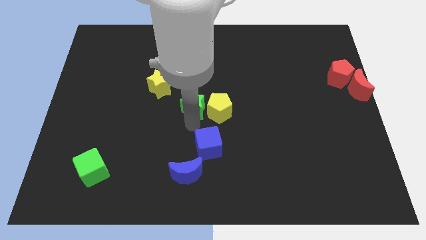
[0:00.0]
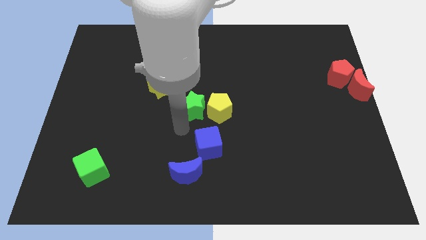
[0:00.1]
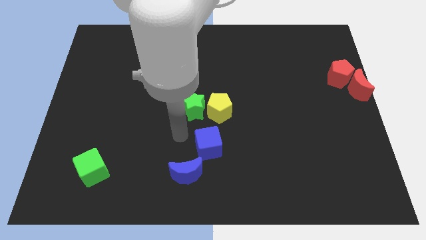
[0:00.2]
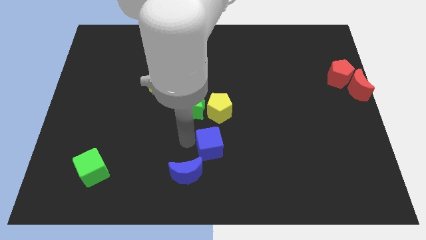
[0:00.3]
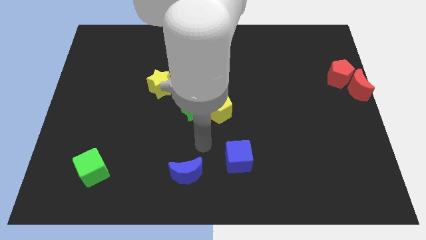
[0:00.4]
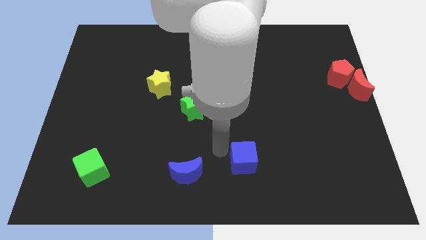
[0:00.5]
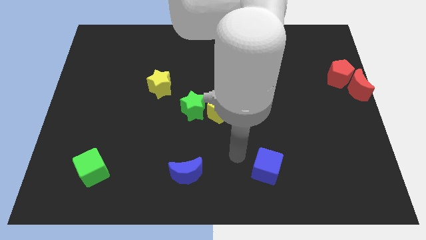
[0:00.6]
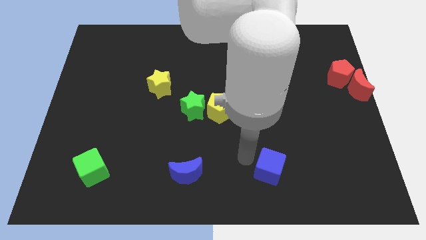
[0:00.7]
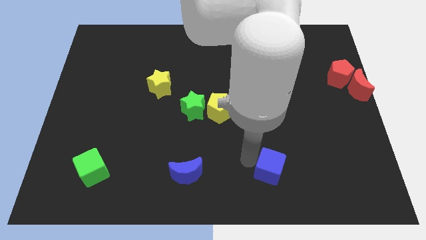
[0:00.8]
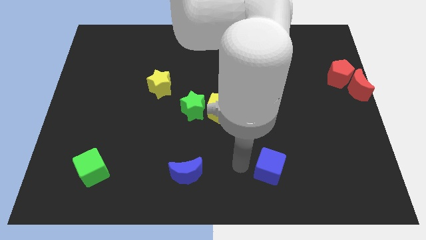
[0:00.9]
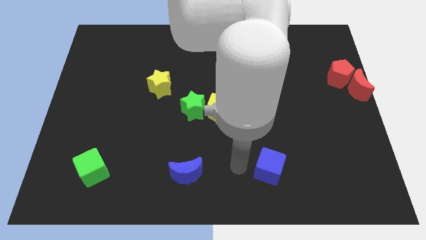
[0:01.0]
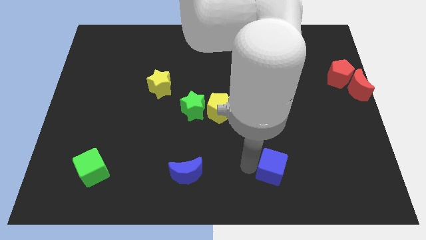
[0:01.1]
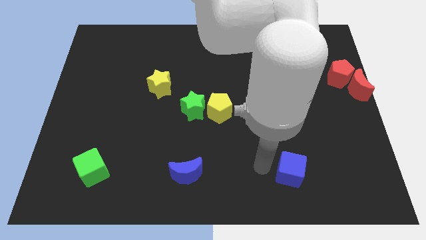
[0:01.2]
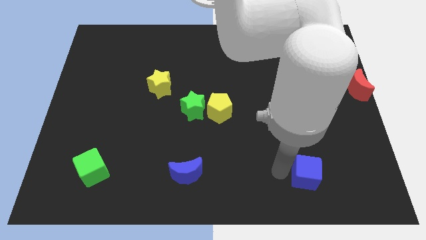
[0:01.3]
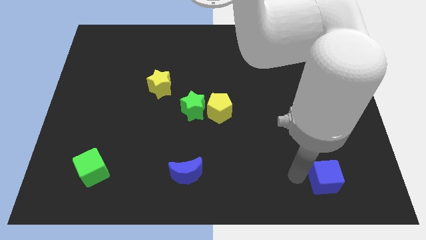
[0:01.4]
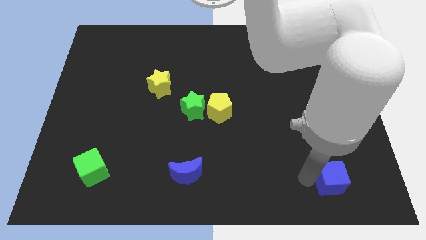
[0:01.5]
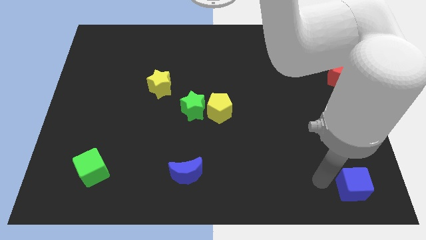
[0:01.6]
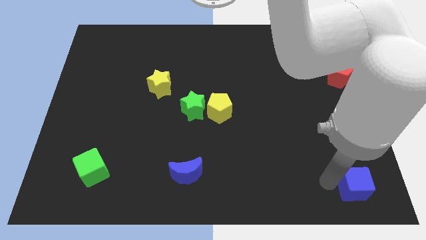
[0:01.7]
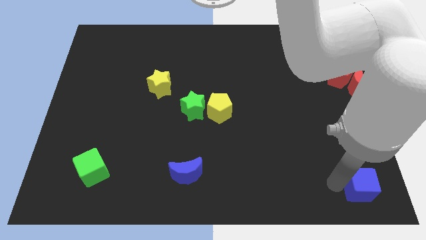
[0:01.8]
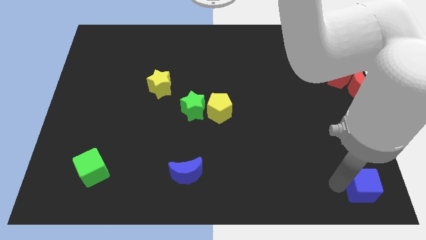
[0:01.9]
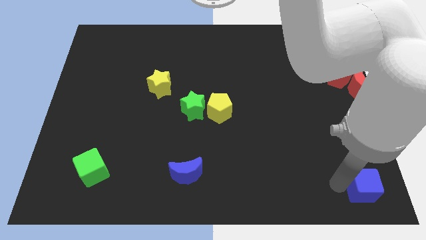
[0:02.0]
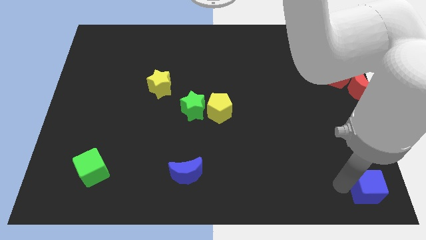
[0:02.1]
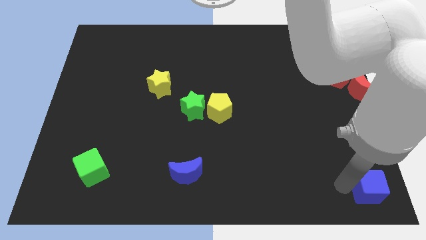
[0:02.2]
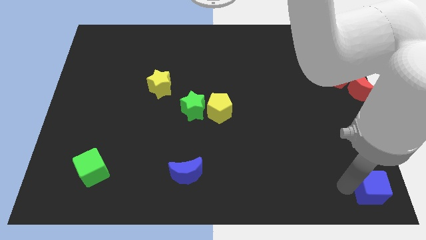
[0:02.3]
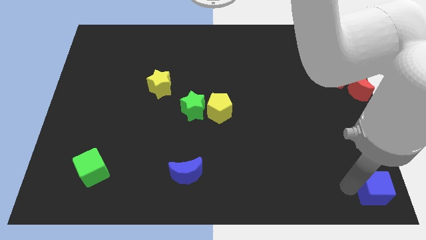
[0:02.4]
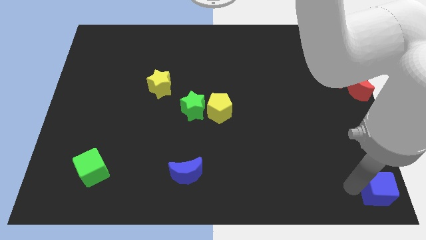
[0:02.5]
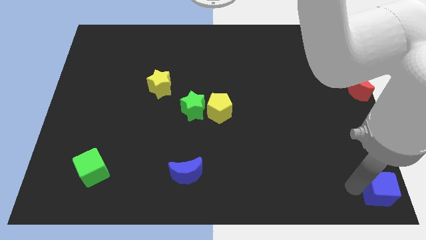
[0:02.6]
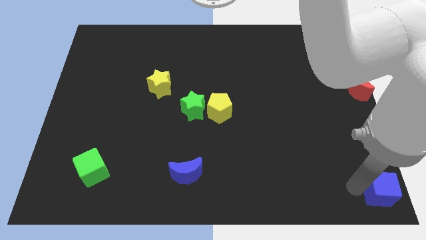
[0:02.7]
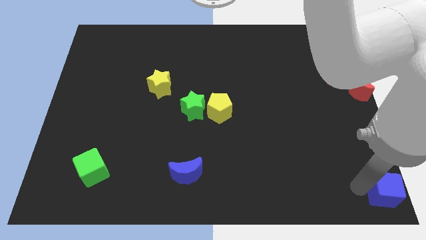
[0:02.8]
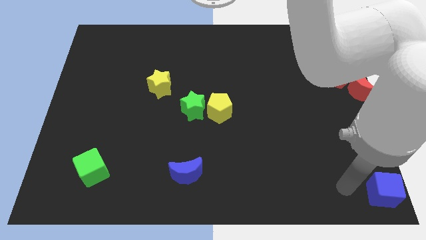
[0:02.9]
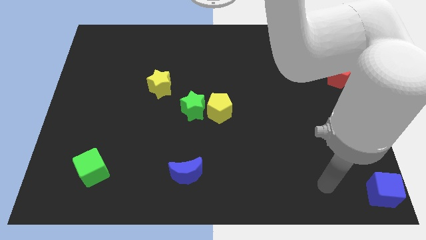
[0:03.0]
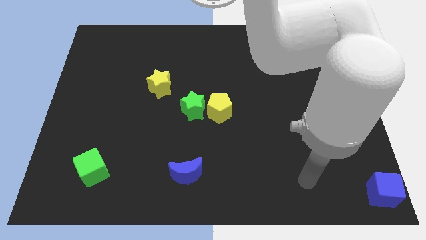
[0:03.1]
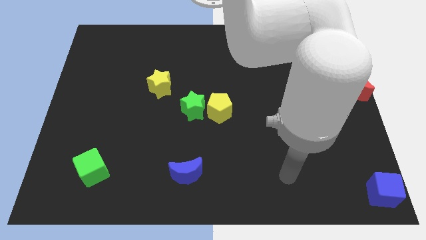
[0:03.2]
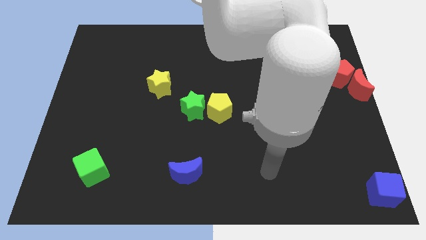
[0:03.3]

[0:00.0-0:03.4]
put the blue cube at the bottom right corner of the board

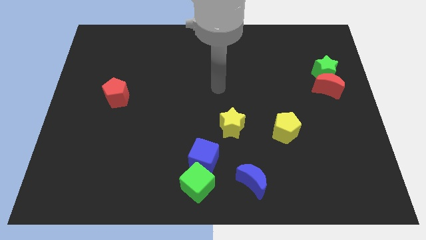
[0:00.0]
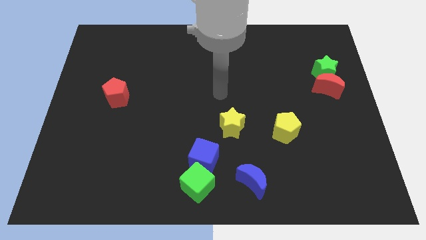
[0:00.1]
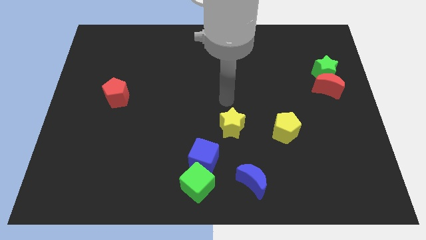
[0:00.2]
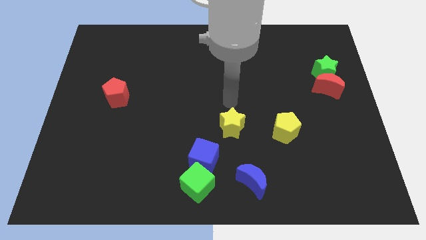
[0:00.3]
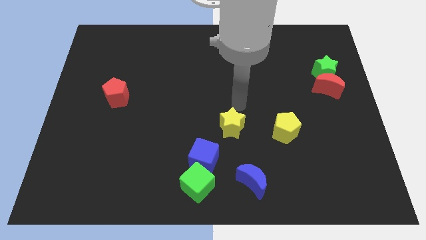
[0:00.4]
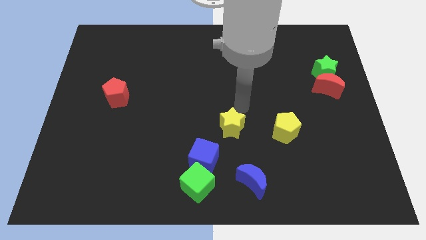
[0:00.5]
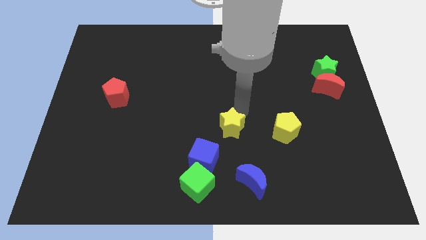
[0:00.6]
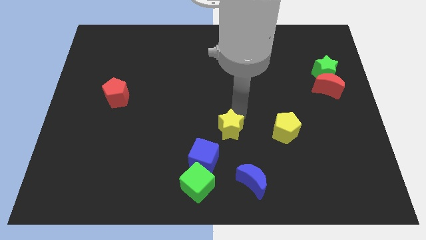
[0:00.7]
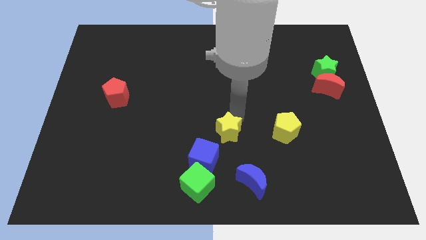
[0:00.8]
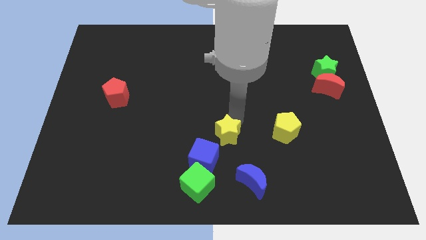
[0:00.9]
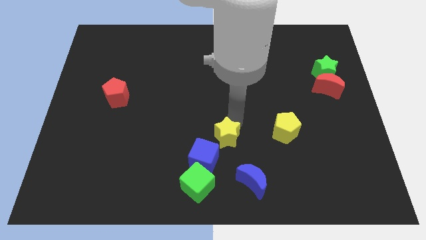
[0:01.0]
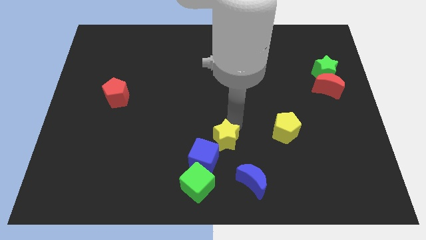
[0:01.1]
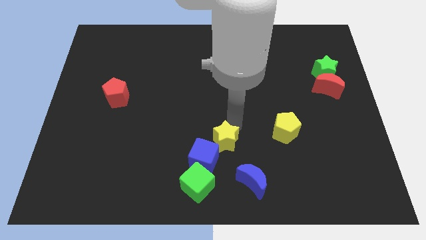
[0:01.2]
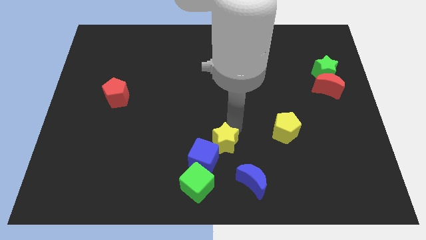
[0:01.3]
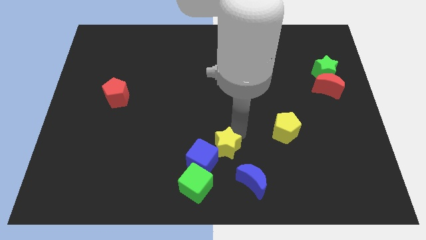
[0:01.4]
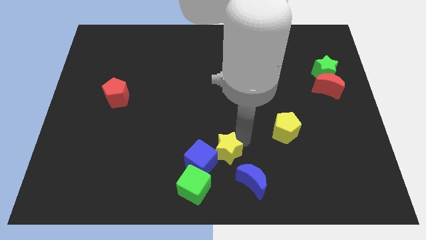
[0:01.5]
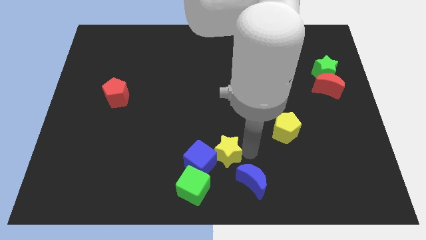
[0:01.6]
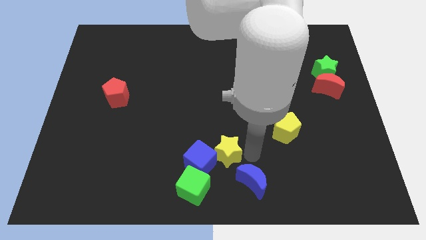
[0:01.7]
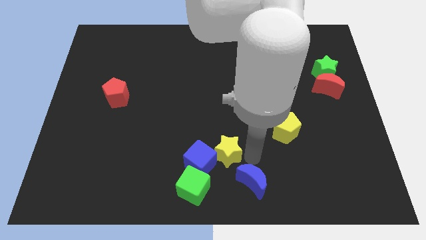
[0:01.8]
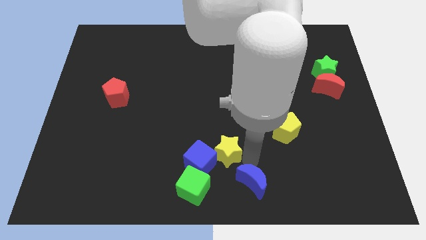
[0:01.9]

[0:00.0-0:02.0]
push the yellow star into the blue blocks

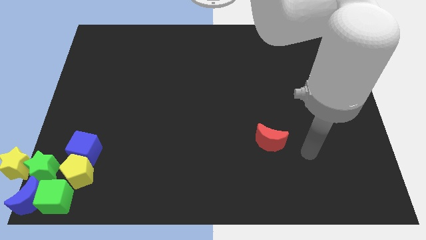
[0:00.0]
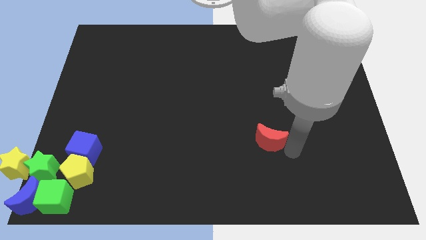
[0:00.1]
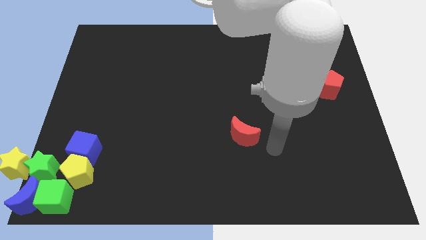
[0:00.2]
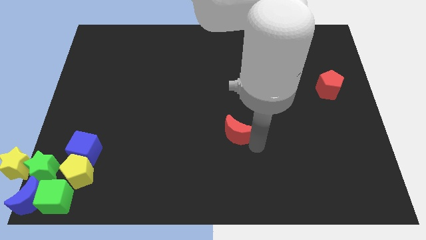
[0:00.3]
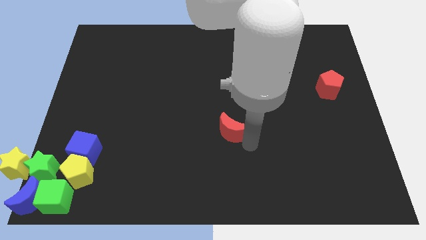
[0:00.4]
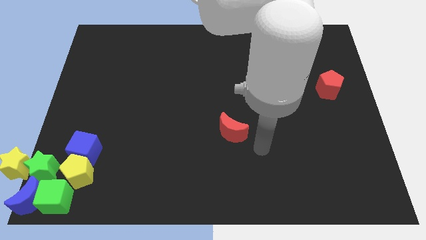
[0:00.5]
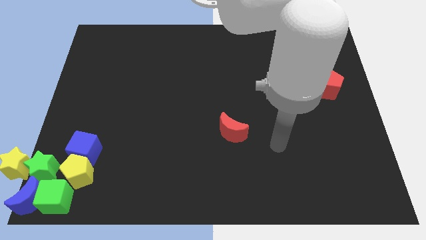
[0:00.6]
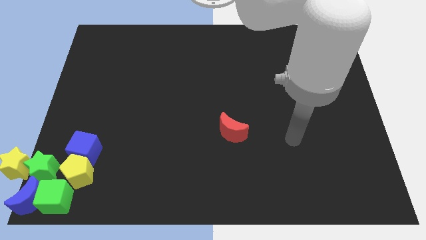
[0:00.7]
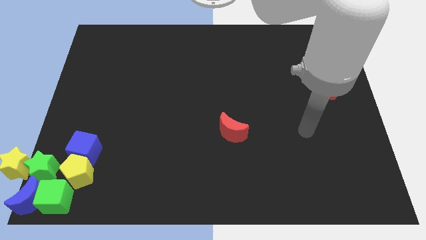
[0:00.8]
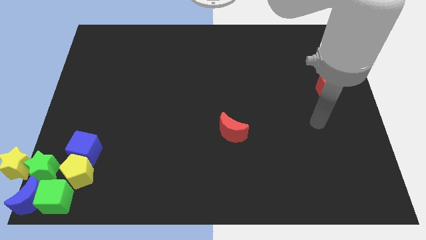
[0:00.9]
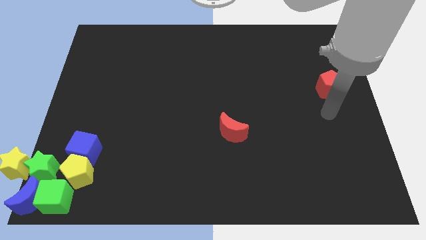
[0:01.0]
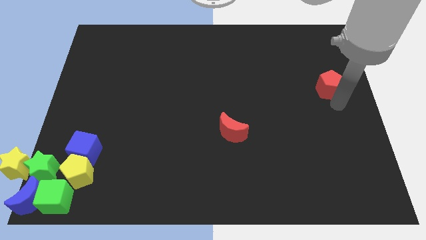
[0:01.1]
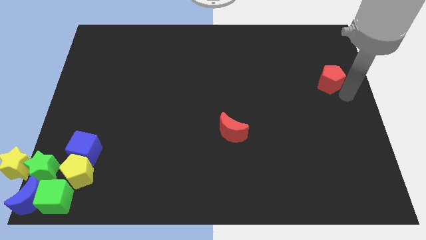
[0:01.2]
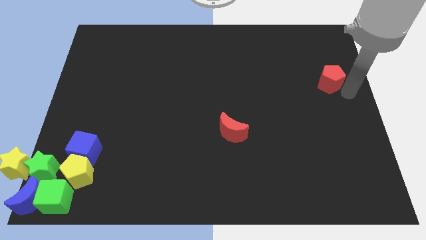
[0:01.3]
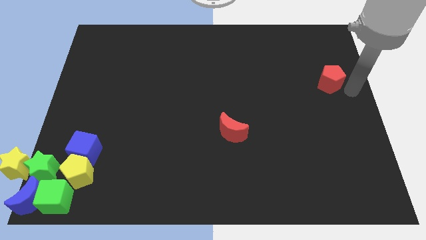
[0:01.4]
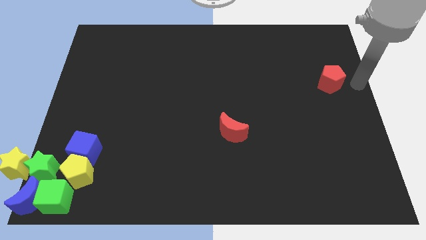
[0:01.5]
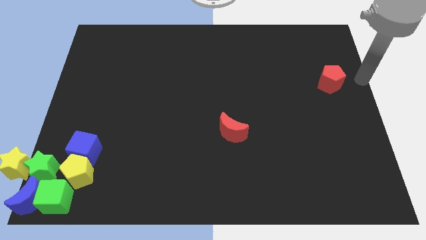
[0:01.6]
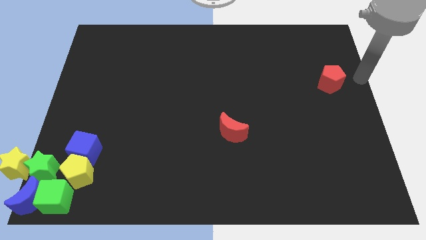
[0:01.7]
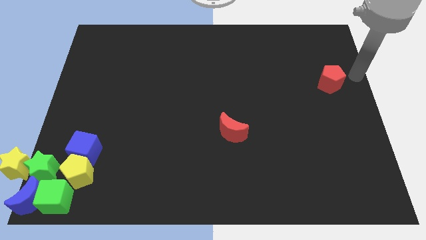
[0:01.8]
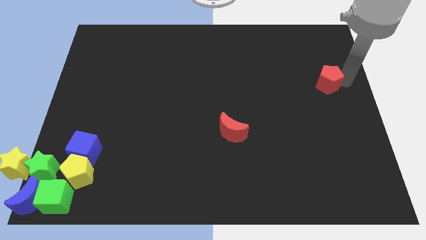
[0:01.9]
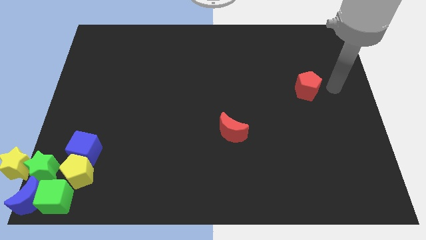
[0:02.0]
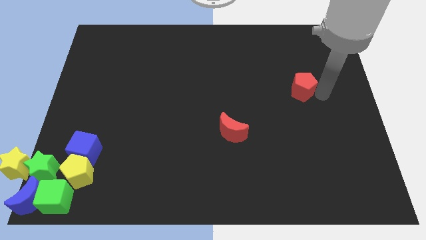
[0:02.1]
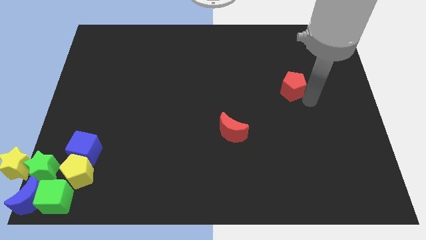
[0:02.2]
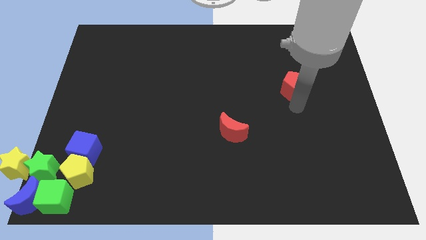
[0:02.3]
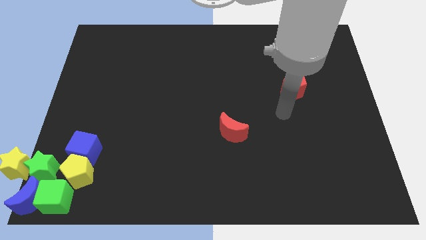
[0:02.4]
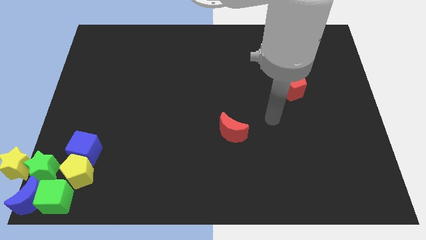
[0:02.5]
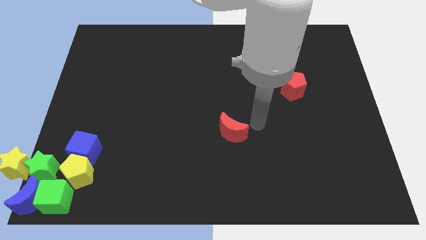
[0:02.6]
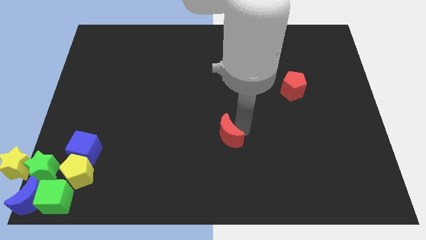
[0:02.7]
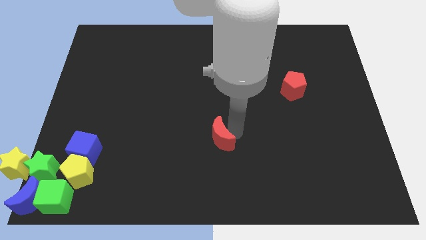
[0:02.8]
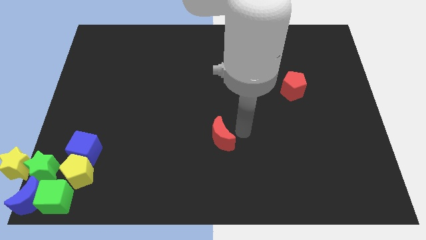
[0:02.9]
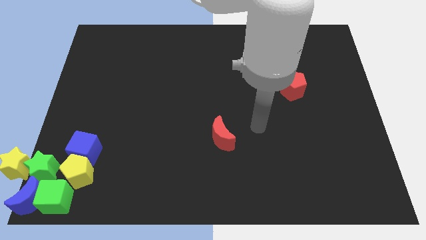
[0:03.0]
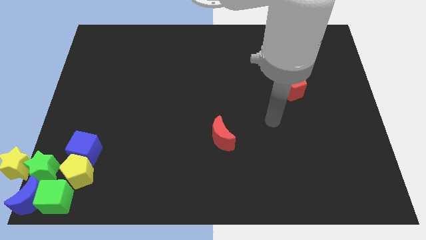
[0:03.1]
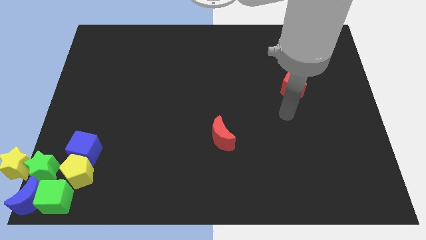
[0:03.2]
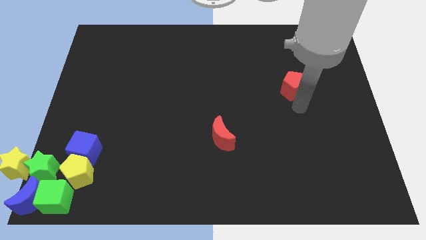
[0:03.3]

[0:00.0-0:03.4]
slide the red crescent and red pentagon to the bottom left side of the board

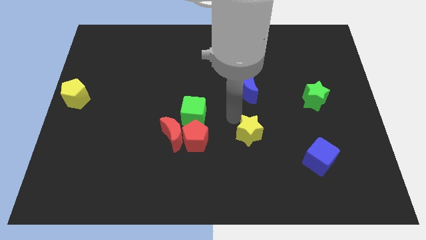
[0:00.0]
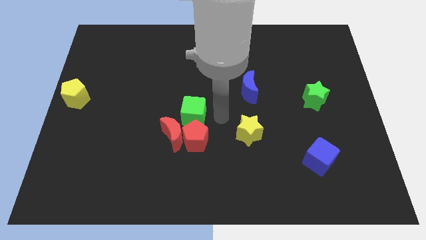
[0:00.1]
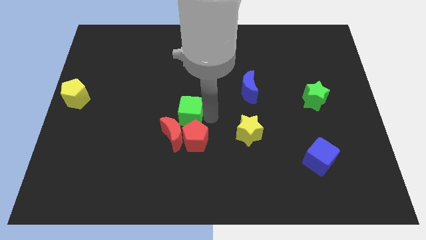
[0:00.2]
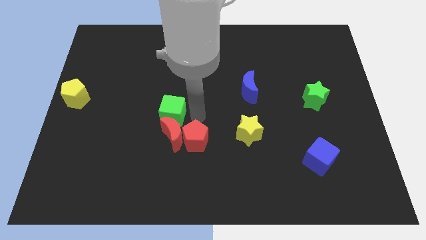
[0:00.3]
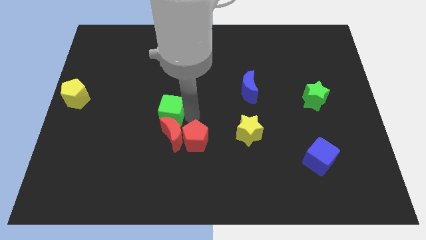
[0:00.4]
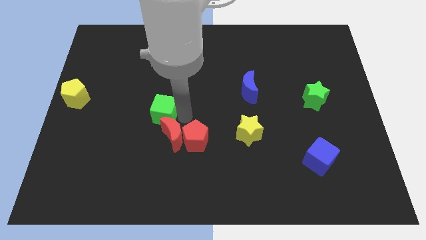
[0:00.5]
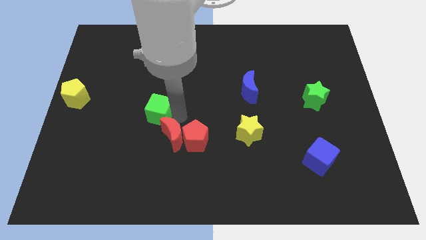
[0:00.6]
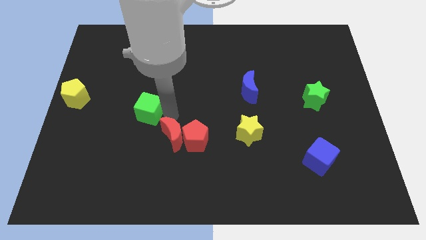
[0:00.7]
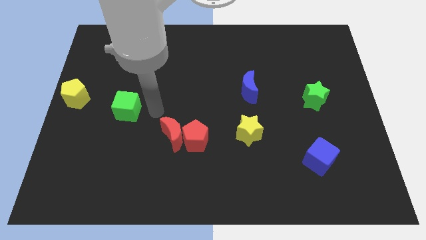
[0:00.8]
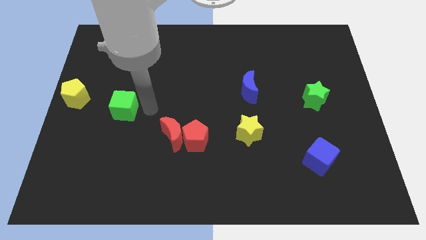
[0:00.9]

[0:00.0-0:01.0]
move the green cube to the top left of the red crescent
